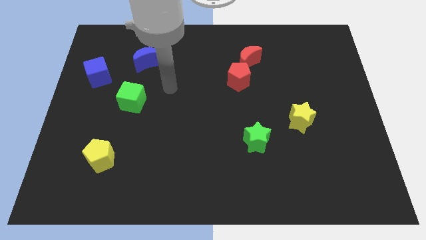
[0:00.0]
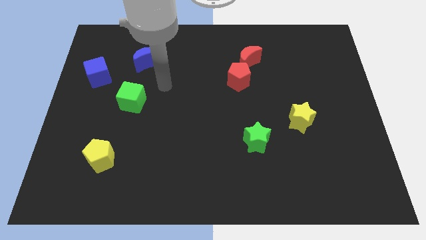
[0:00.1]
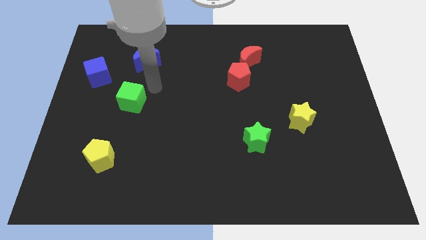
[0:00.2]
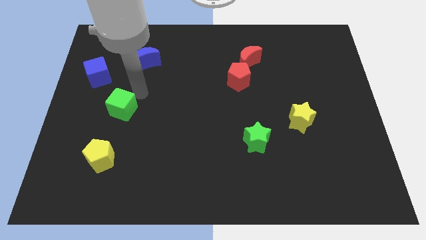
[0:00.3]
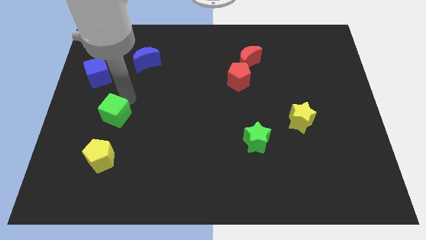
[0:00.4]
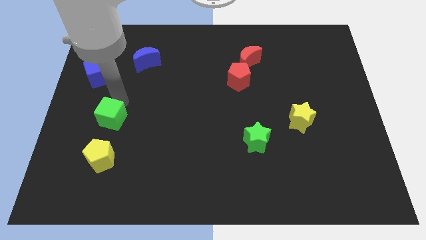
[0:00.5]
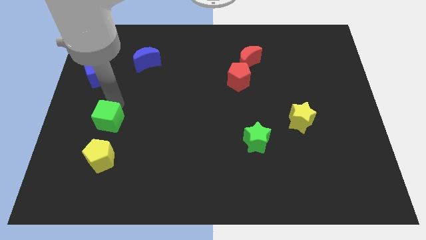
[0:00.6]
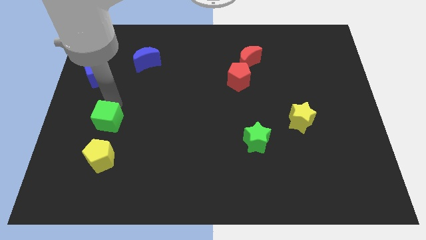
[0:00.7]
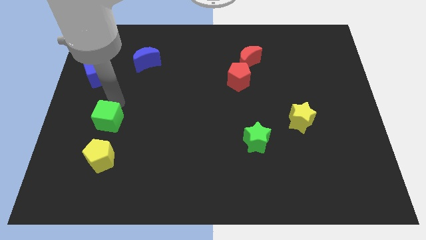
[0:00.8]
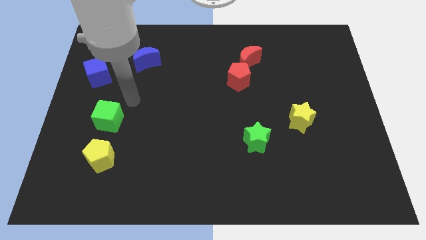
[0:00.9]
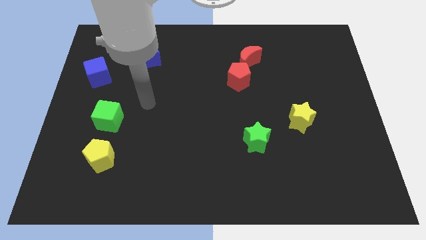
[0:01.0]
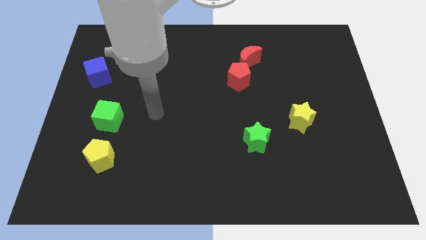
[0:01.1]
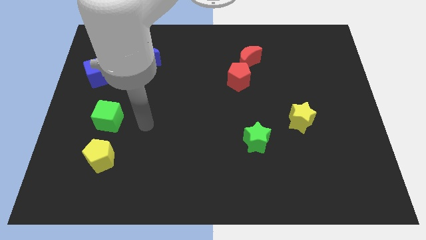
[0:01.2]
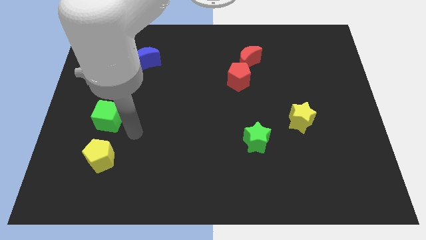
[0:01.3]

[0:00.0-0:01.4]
push the green cube towards the yellow pentagon

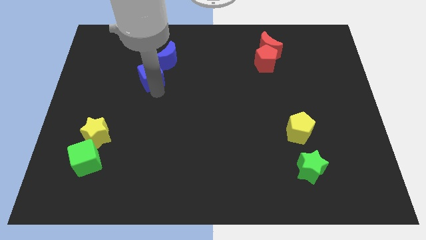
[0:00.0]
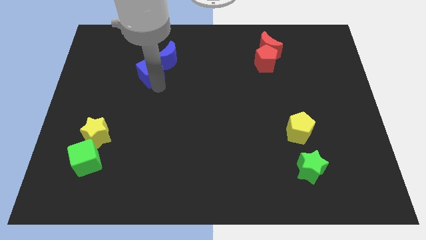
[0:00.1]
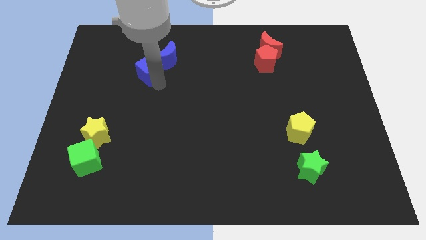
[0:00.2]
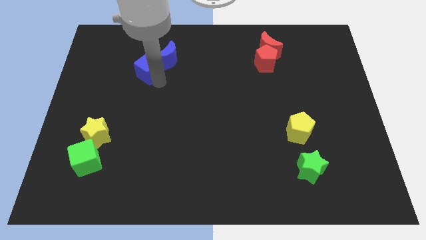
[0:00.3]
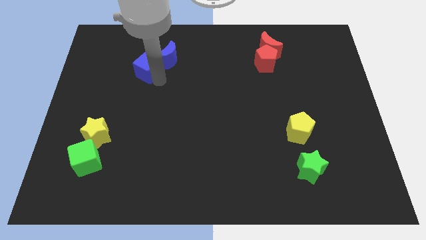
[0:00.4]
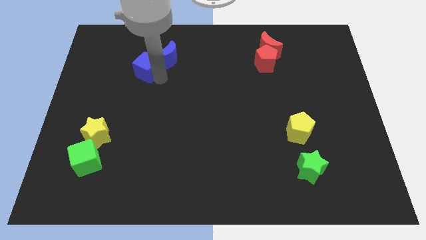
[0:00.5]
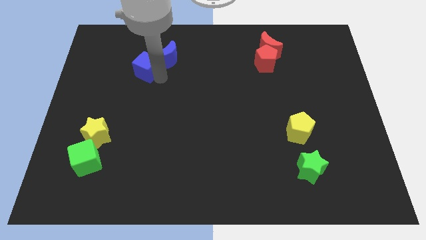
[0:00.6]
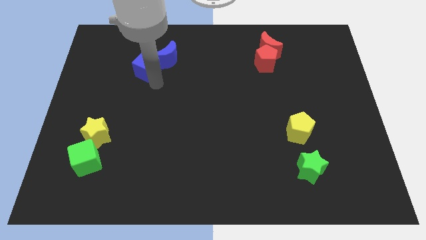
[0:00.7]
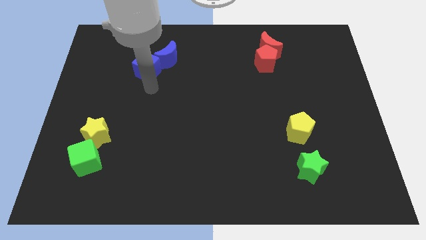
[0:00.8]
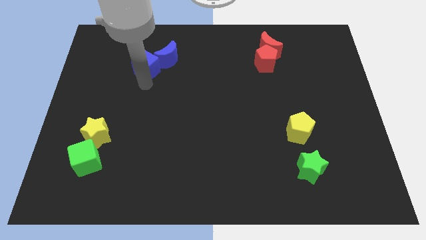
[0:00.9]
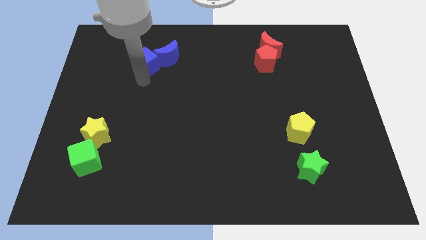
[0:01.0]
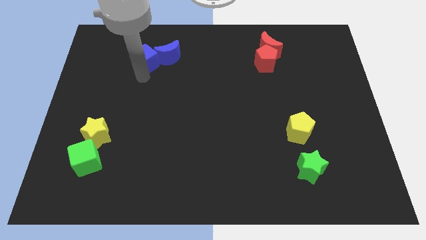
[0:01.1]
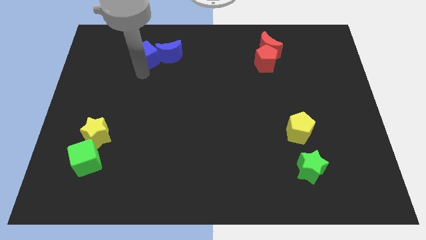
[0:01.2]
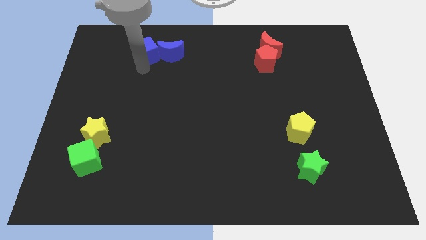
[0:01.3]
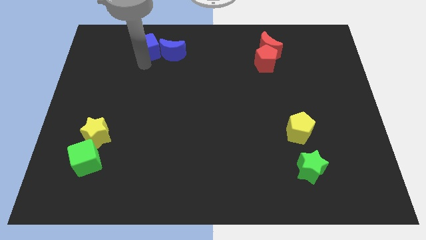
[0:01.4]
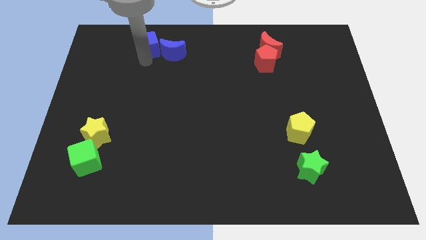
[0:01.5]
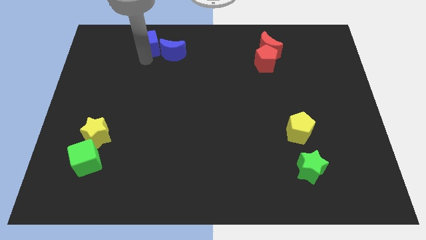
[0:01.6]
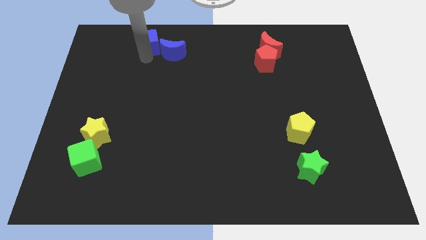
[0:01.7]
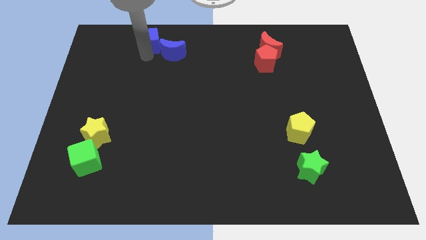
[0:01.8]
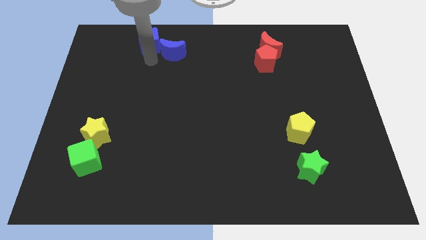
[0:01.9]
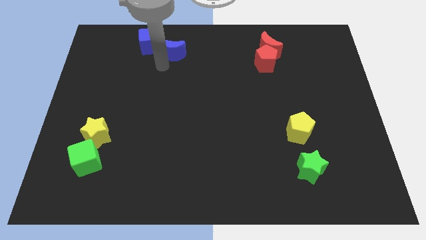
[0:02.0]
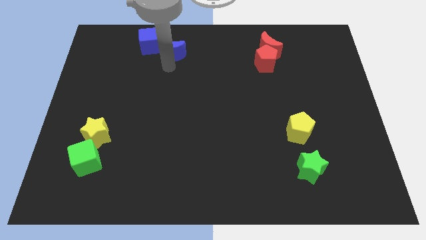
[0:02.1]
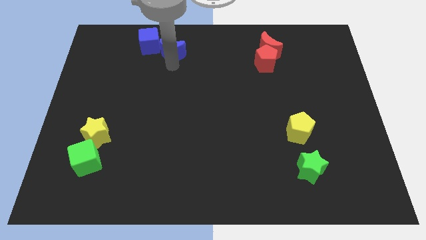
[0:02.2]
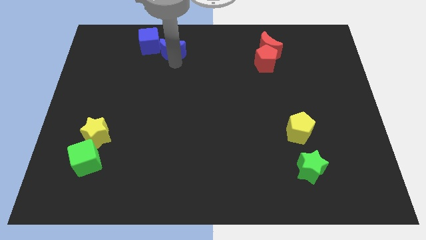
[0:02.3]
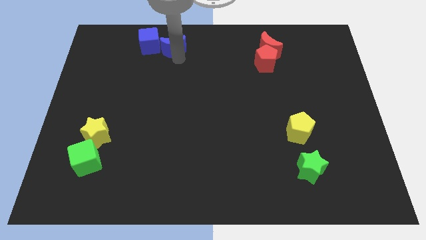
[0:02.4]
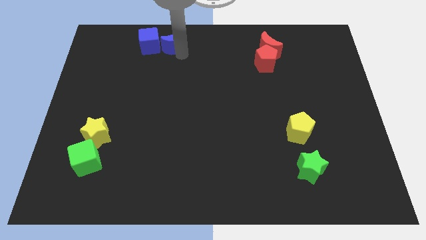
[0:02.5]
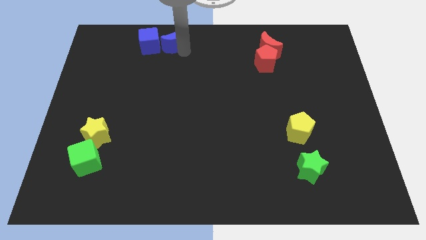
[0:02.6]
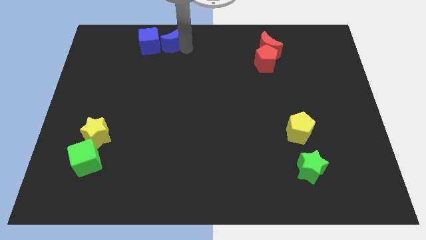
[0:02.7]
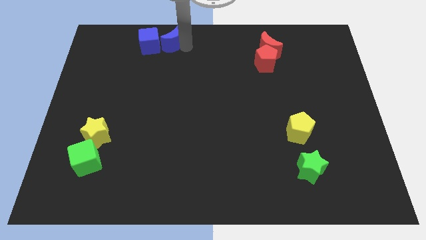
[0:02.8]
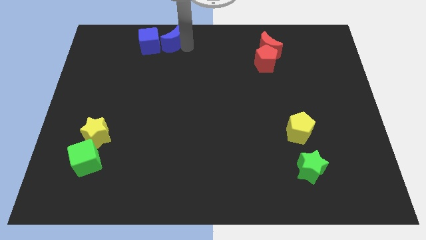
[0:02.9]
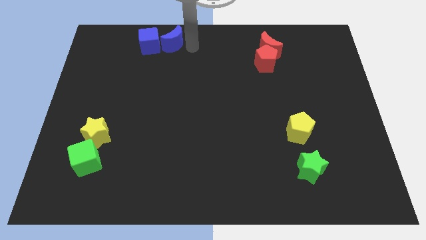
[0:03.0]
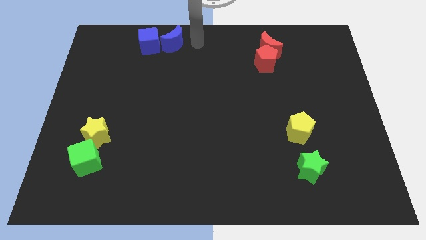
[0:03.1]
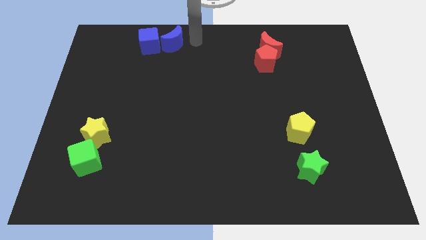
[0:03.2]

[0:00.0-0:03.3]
push blue blocks adjacent to each other

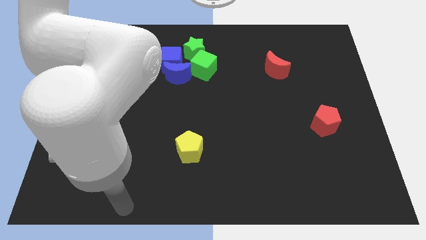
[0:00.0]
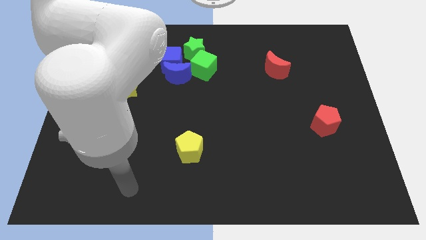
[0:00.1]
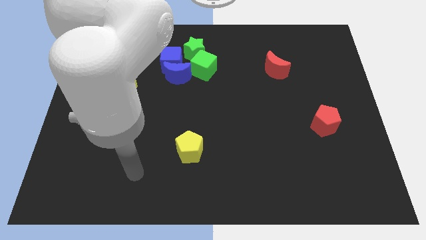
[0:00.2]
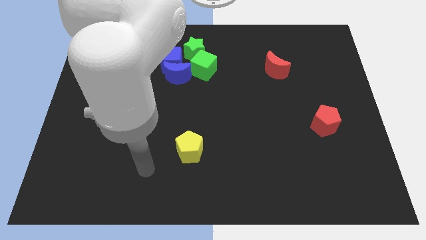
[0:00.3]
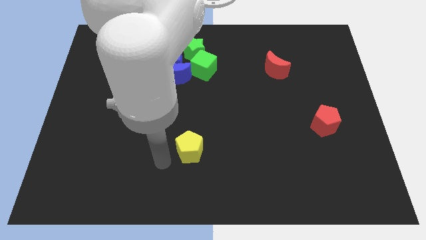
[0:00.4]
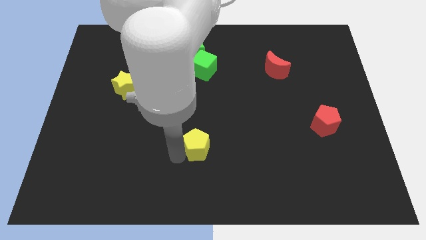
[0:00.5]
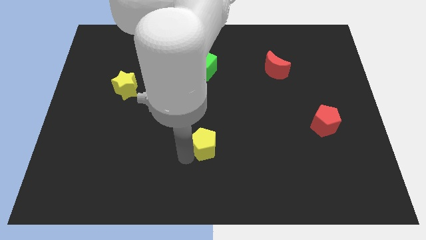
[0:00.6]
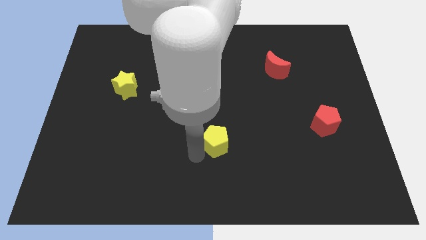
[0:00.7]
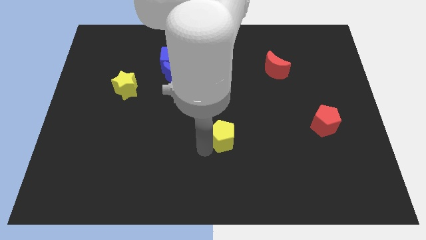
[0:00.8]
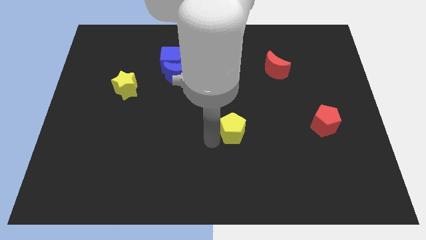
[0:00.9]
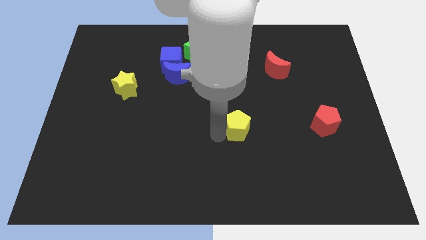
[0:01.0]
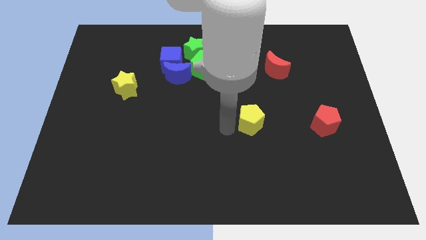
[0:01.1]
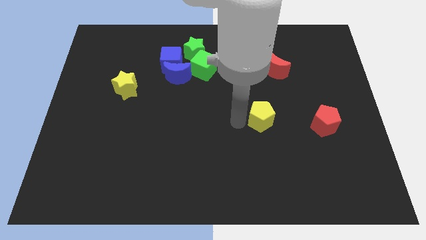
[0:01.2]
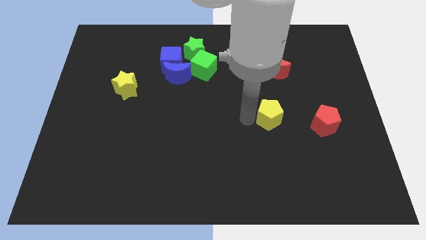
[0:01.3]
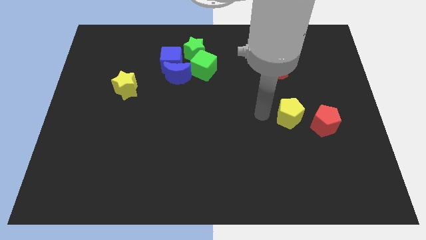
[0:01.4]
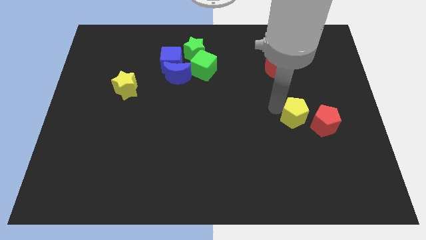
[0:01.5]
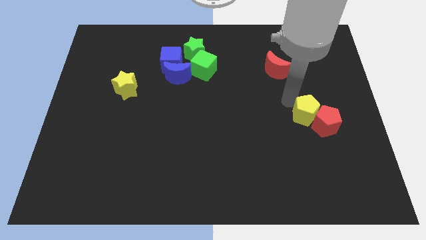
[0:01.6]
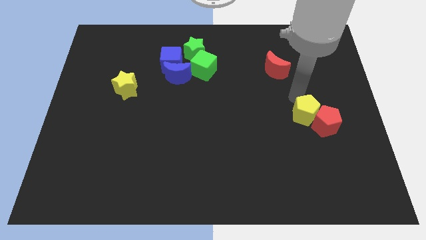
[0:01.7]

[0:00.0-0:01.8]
push the yellow pentagon into the top left side of the red pentagon

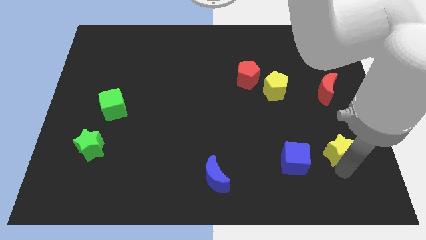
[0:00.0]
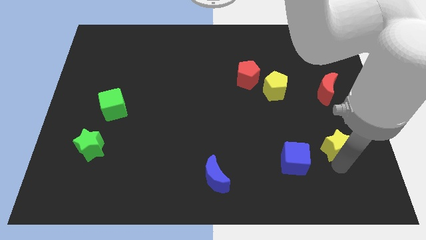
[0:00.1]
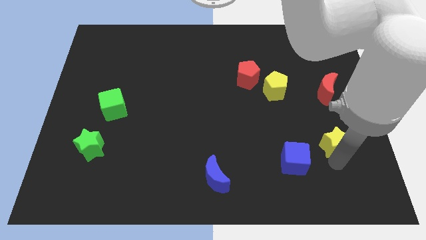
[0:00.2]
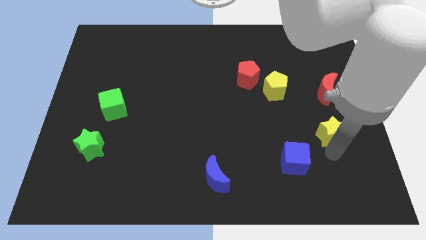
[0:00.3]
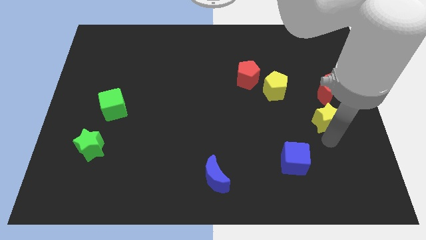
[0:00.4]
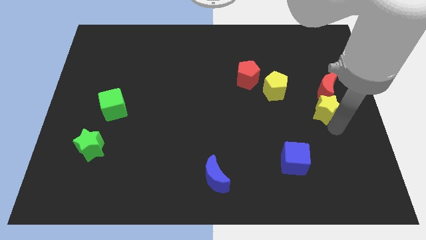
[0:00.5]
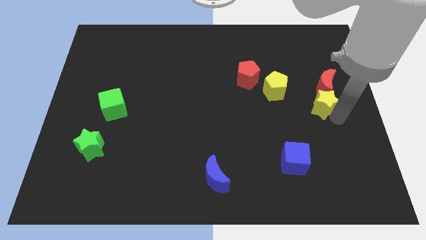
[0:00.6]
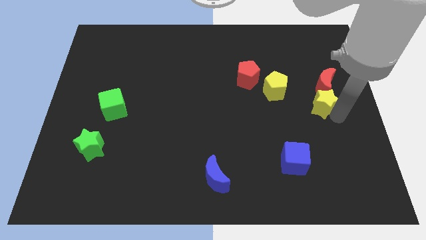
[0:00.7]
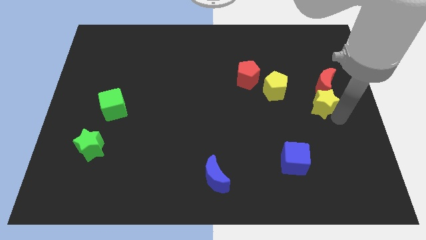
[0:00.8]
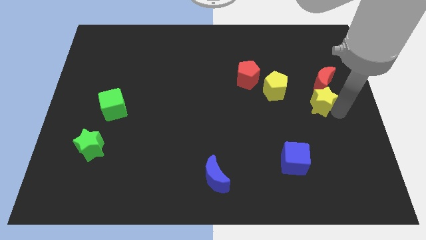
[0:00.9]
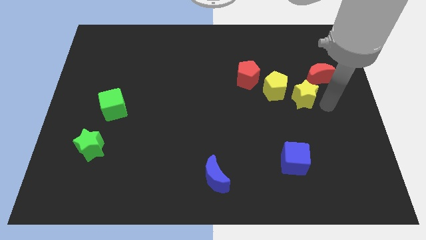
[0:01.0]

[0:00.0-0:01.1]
push the yellow star into the red moon

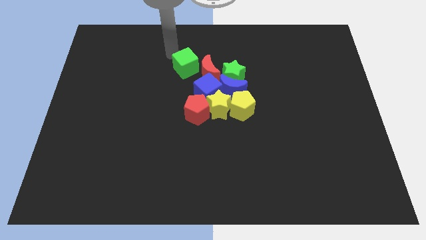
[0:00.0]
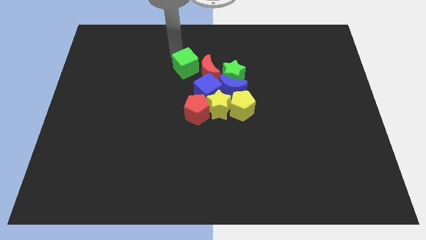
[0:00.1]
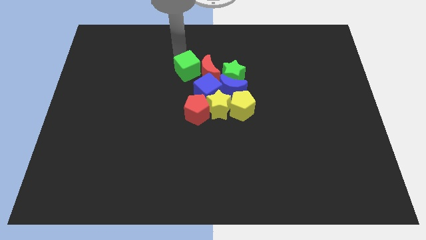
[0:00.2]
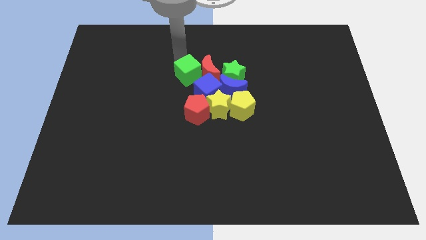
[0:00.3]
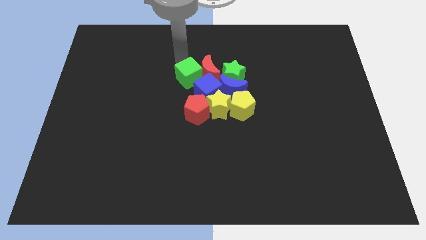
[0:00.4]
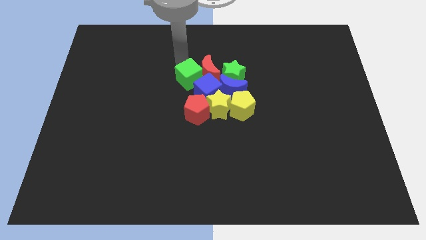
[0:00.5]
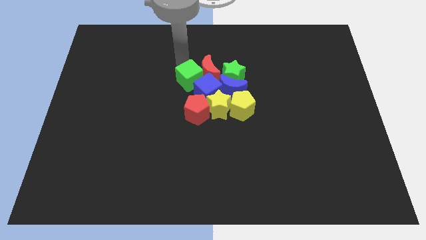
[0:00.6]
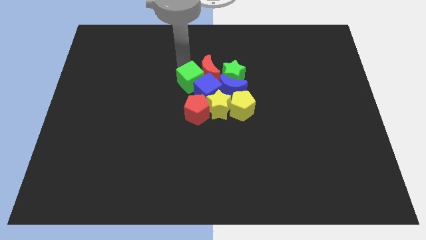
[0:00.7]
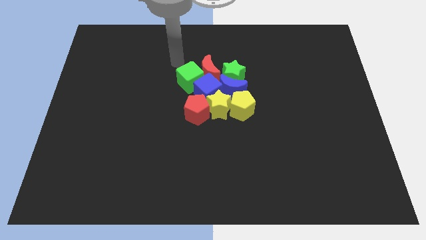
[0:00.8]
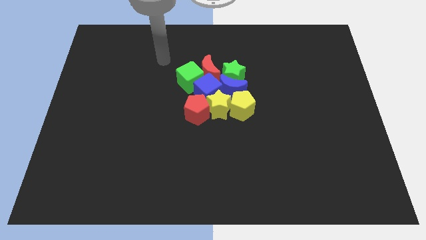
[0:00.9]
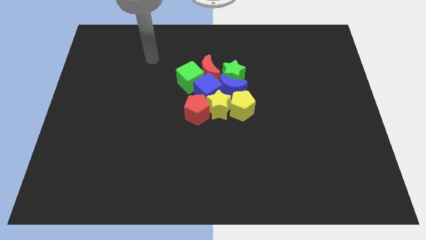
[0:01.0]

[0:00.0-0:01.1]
move the green cube to the left of the red crescent

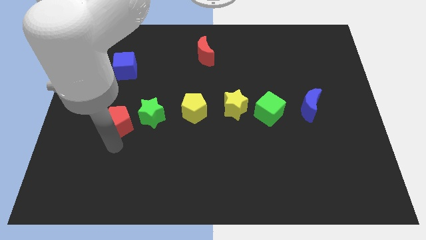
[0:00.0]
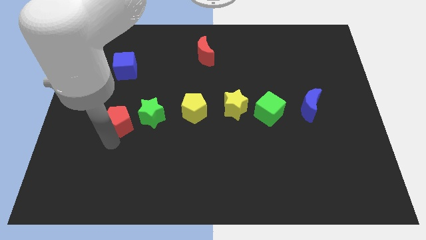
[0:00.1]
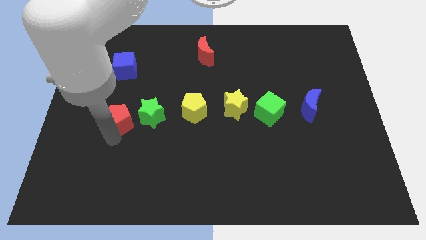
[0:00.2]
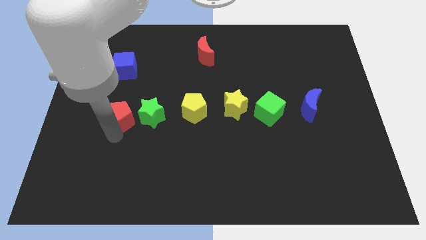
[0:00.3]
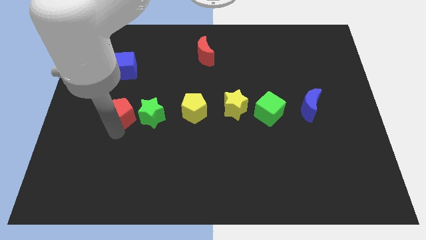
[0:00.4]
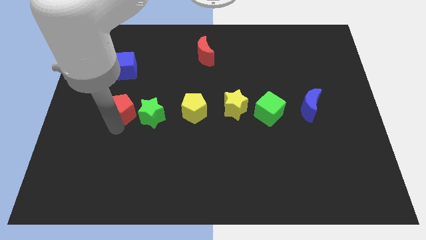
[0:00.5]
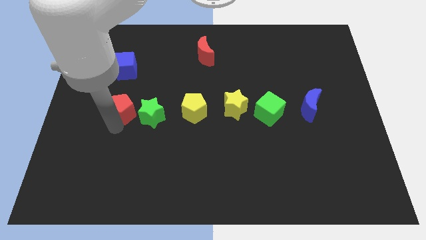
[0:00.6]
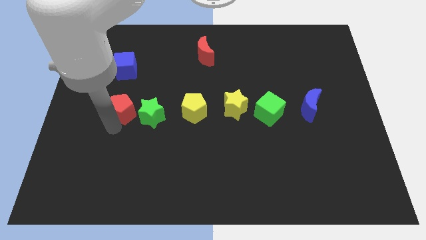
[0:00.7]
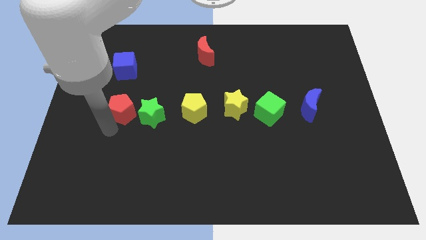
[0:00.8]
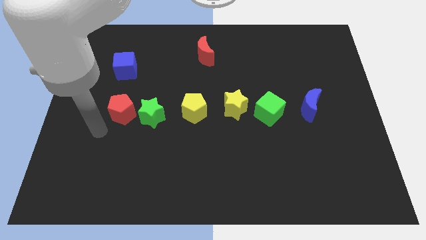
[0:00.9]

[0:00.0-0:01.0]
move the red pentagon underneath the blue cube
